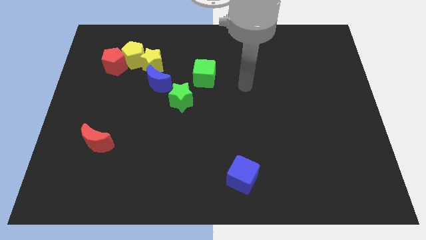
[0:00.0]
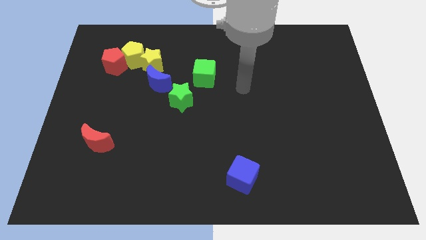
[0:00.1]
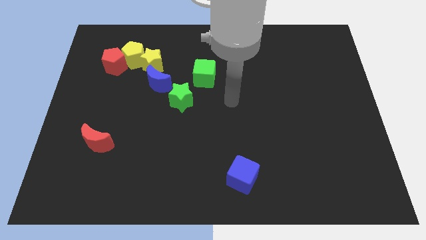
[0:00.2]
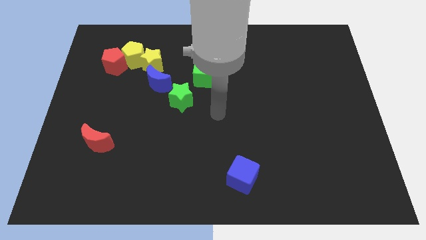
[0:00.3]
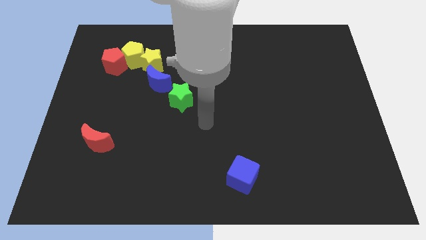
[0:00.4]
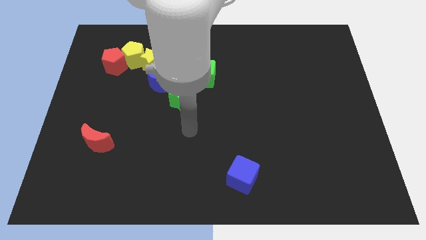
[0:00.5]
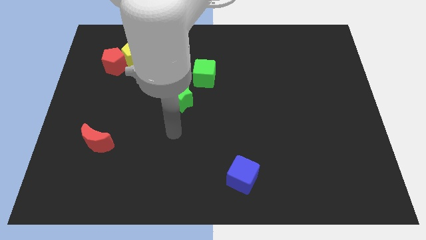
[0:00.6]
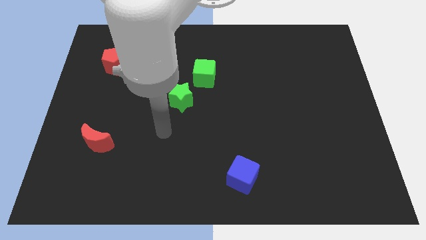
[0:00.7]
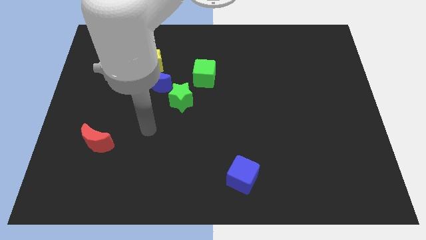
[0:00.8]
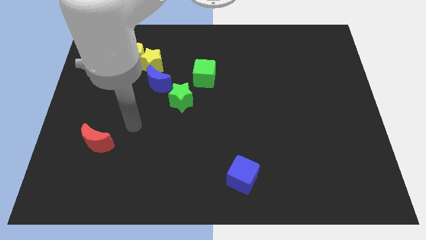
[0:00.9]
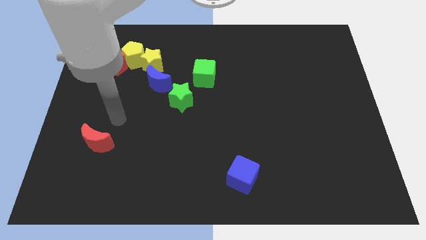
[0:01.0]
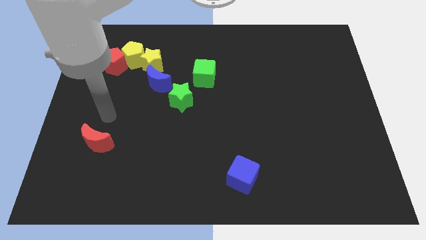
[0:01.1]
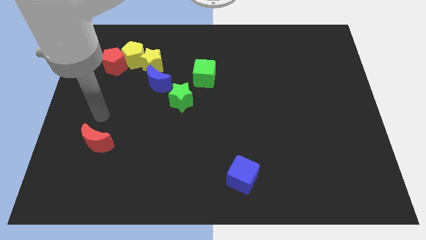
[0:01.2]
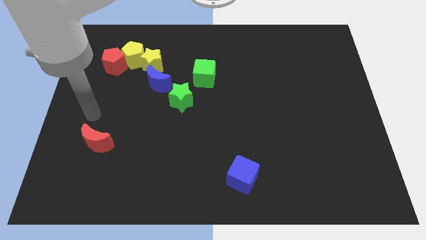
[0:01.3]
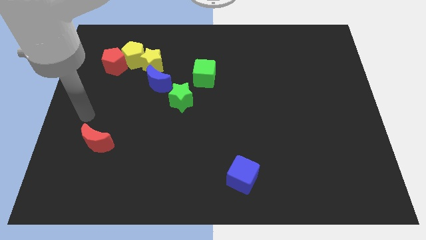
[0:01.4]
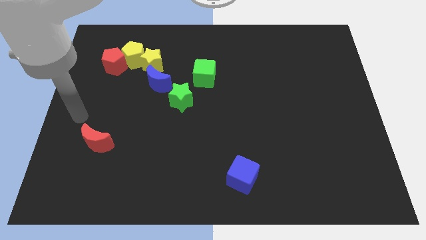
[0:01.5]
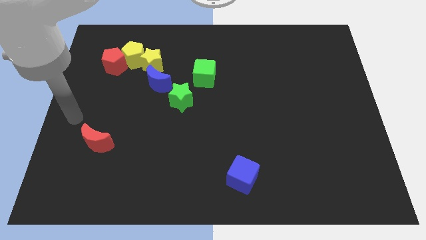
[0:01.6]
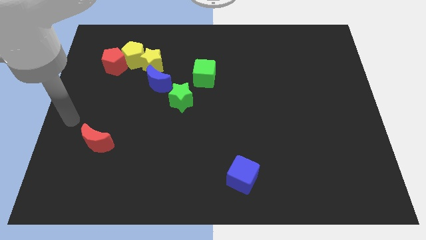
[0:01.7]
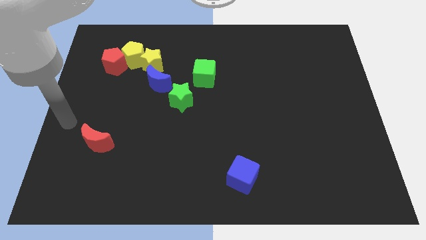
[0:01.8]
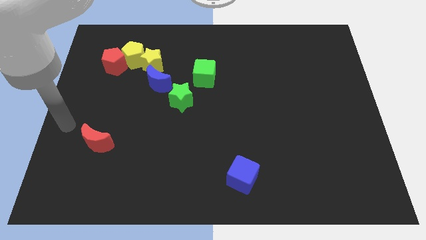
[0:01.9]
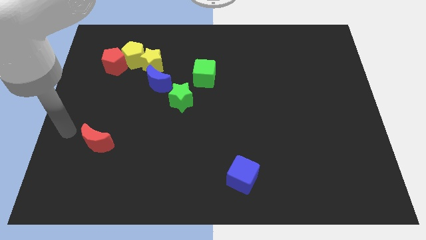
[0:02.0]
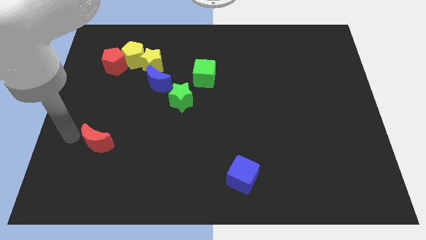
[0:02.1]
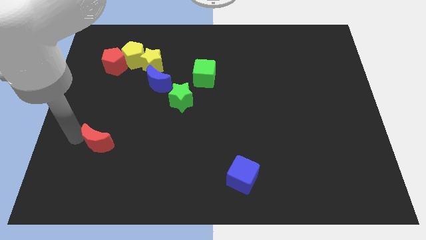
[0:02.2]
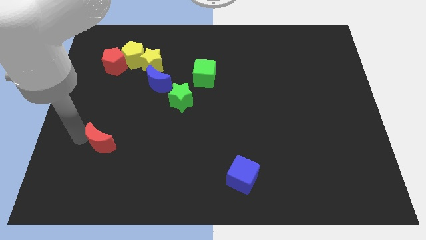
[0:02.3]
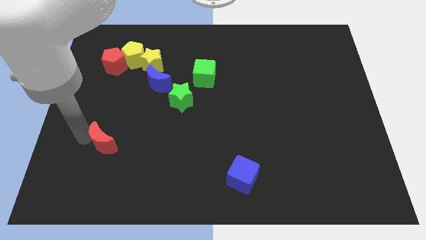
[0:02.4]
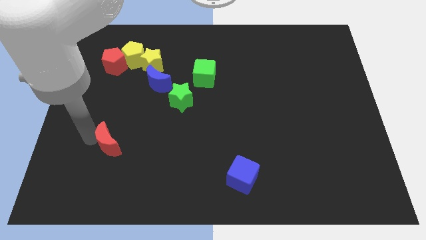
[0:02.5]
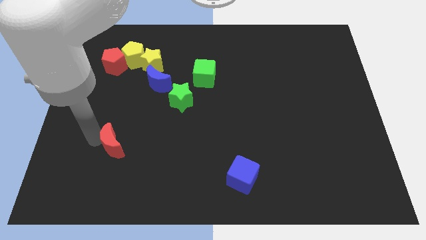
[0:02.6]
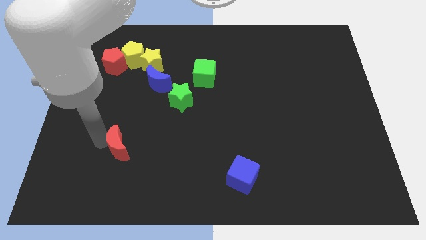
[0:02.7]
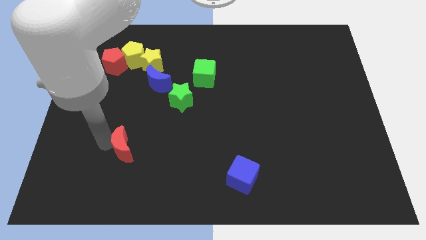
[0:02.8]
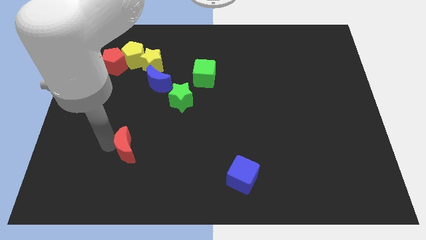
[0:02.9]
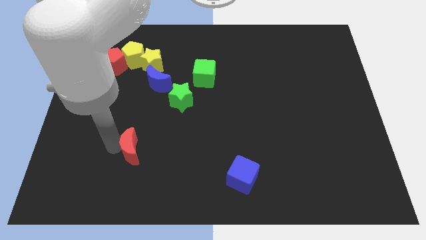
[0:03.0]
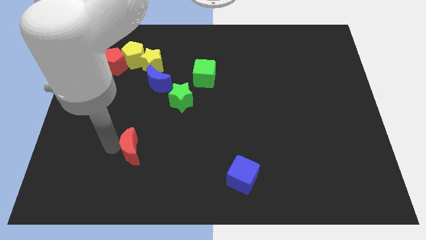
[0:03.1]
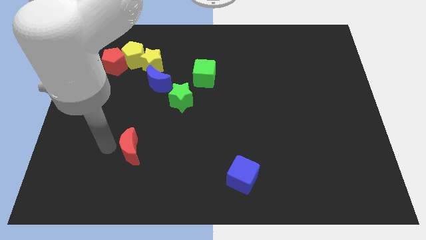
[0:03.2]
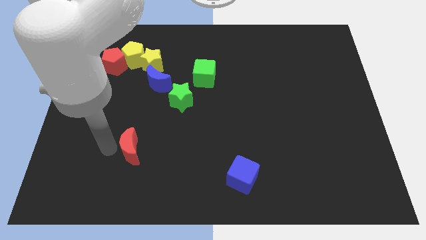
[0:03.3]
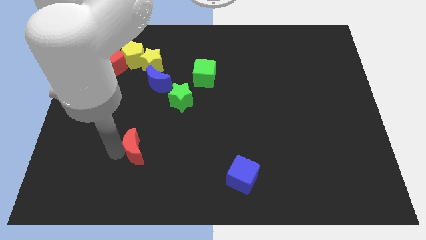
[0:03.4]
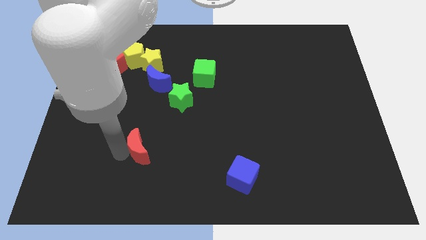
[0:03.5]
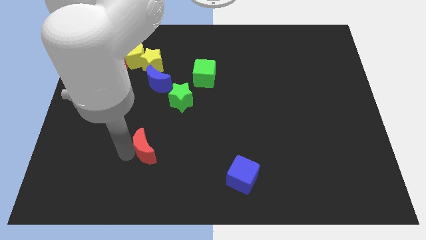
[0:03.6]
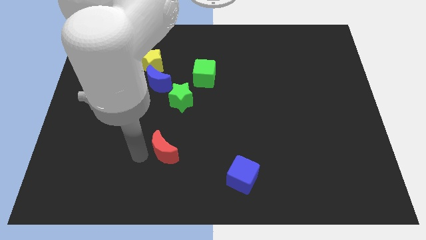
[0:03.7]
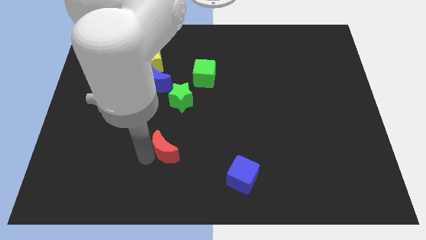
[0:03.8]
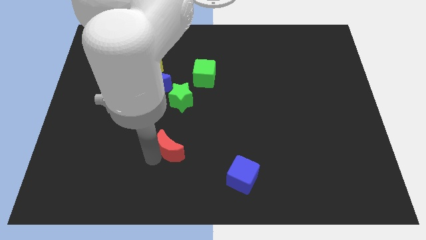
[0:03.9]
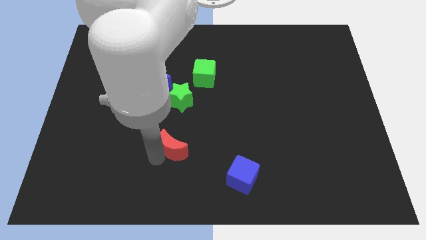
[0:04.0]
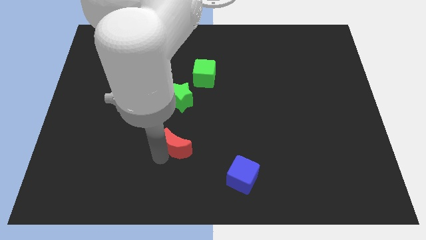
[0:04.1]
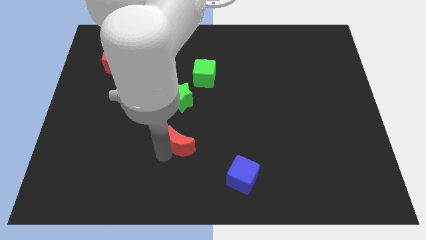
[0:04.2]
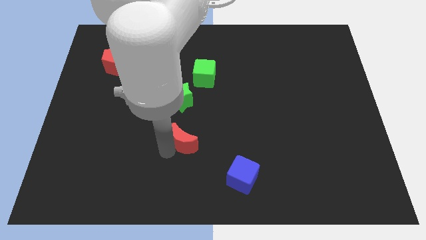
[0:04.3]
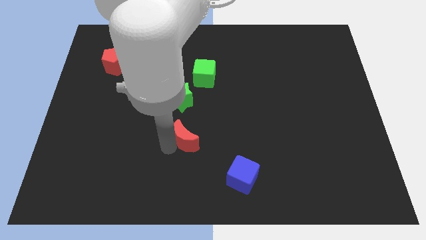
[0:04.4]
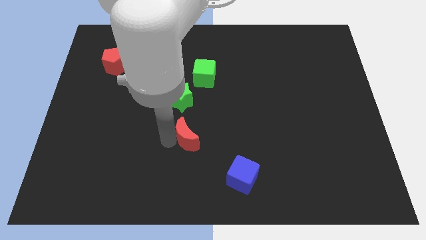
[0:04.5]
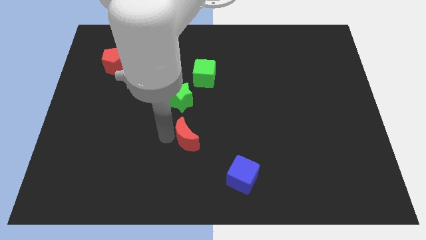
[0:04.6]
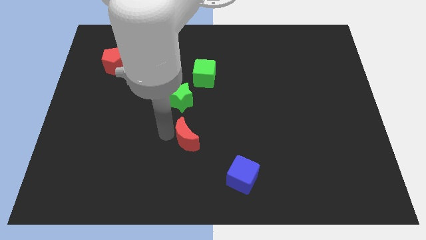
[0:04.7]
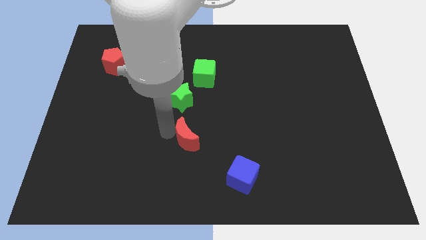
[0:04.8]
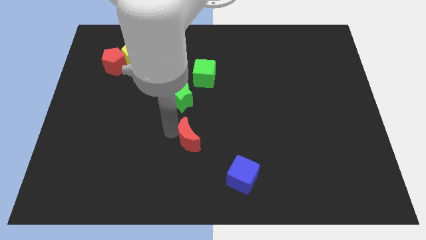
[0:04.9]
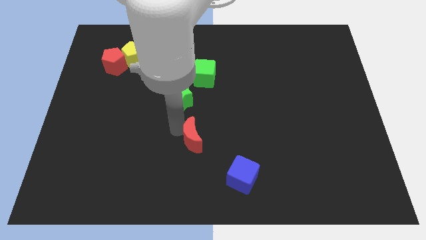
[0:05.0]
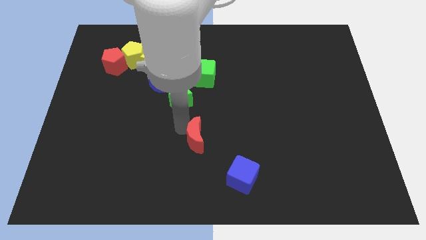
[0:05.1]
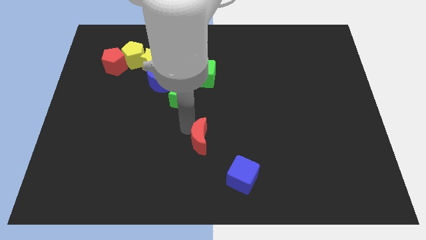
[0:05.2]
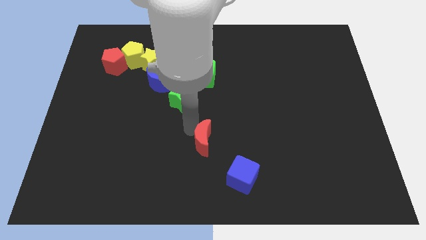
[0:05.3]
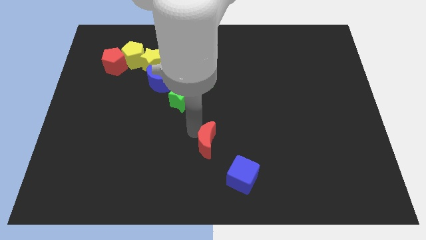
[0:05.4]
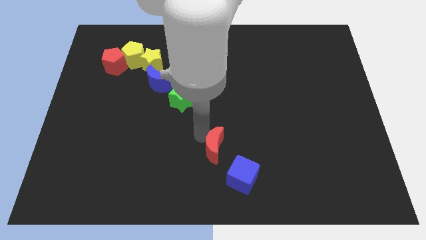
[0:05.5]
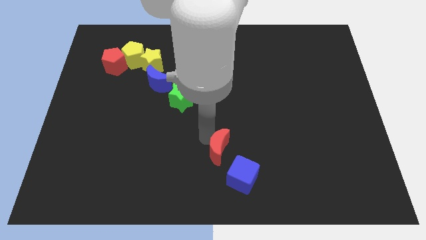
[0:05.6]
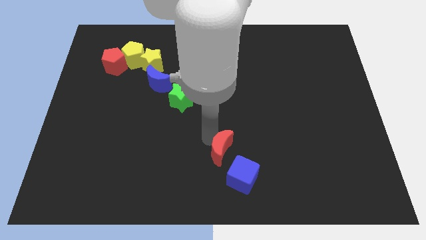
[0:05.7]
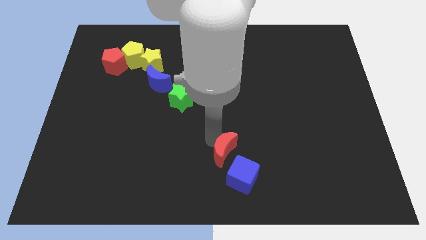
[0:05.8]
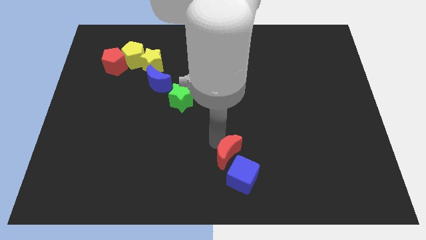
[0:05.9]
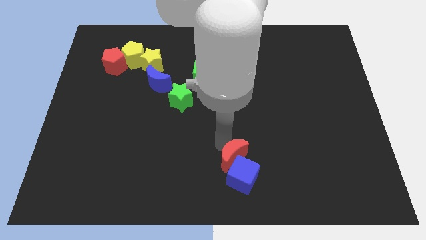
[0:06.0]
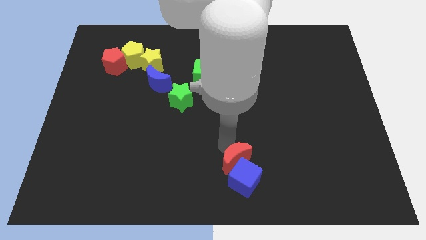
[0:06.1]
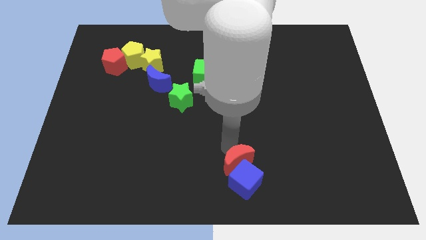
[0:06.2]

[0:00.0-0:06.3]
slide the red moon next to the blue cube

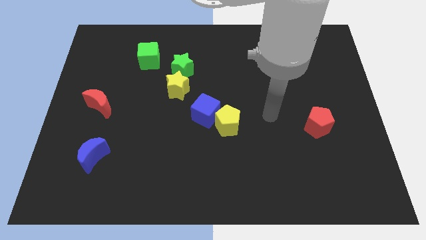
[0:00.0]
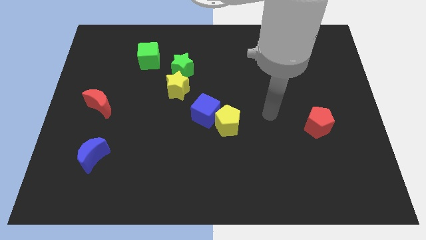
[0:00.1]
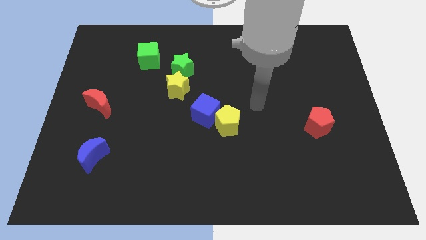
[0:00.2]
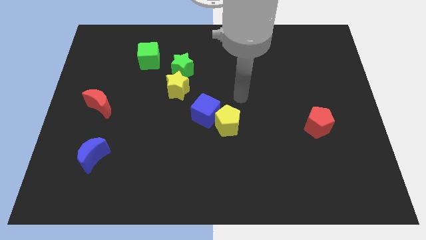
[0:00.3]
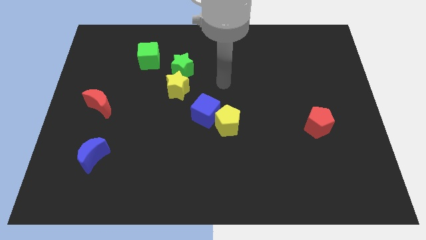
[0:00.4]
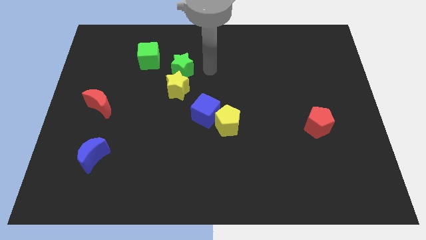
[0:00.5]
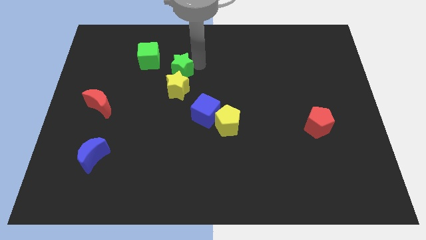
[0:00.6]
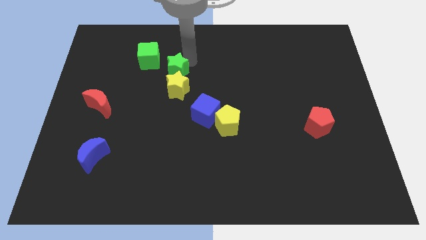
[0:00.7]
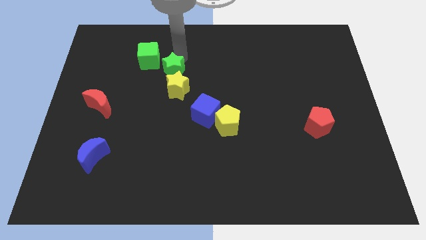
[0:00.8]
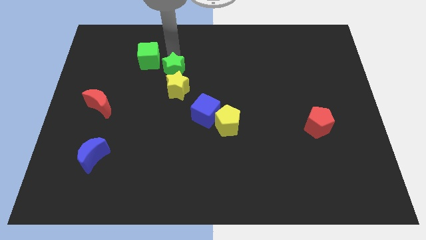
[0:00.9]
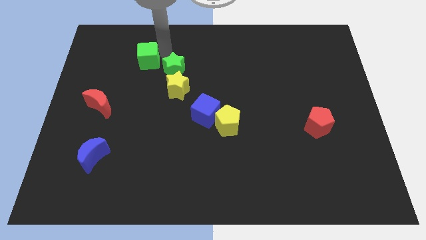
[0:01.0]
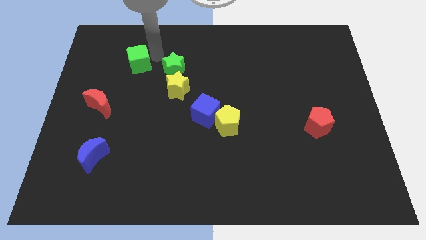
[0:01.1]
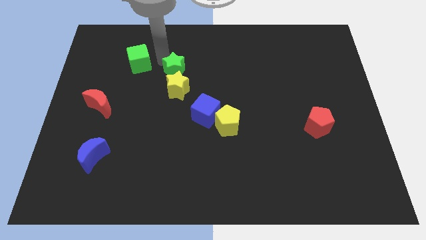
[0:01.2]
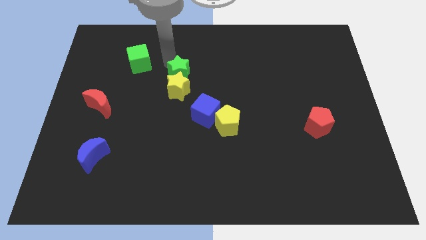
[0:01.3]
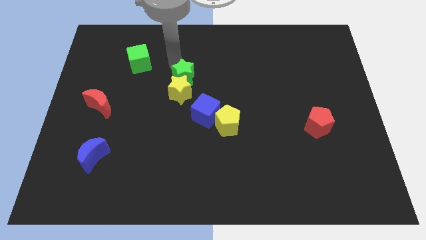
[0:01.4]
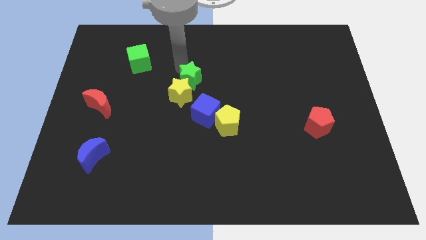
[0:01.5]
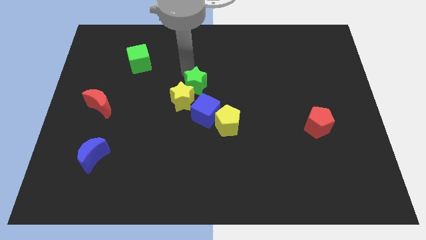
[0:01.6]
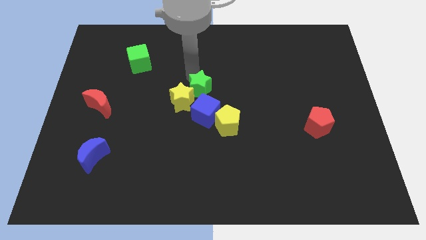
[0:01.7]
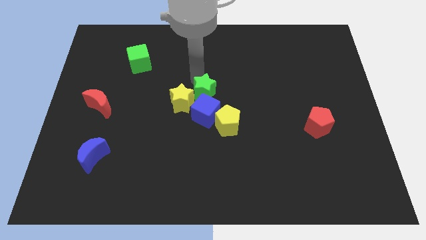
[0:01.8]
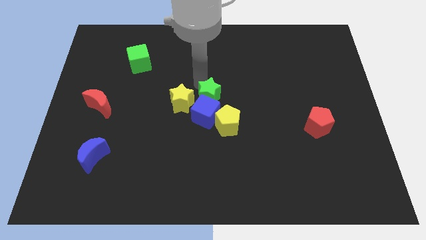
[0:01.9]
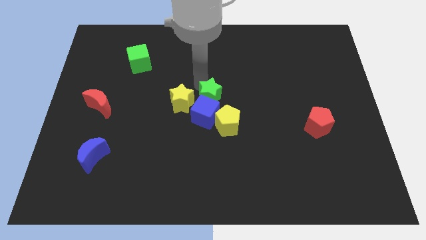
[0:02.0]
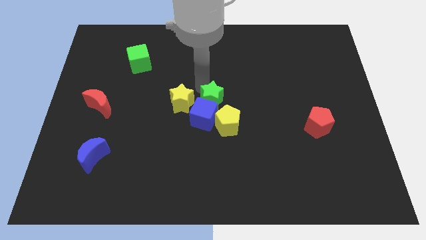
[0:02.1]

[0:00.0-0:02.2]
put the green star to the blue cube
